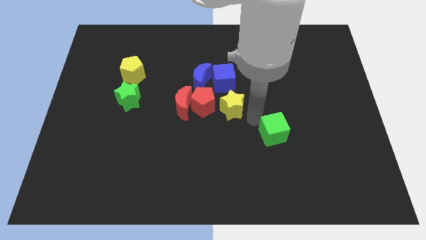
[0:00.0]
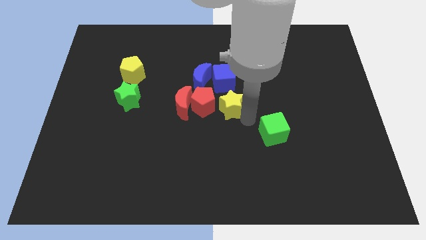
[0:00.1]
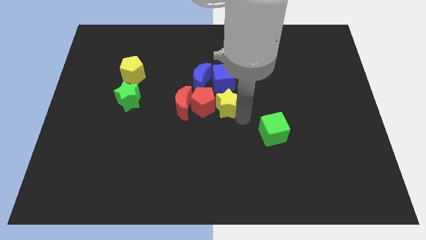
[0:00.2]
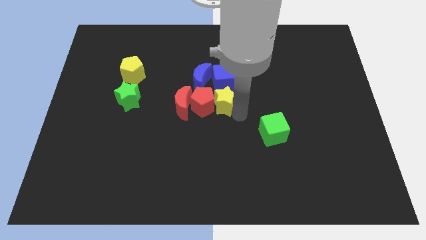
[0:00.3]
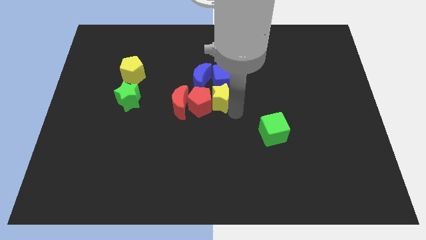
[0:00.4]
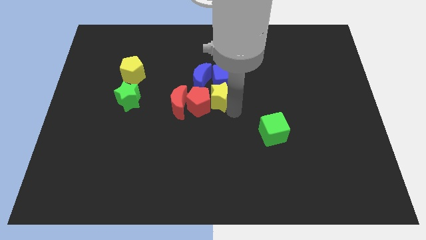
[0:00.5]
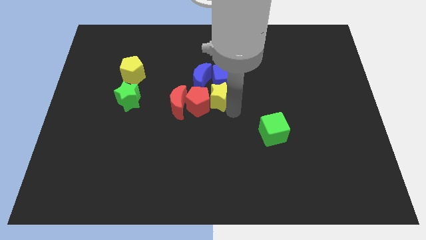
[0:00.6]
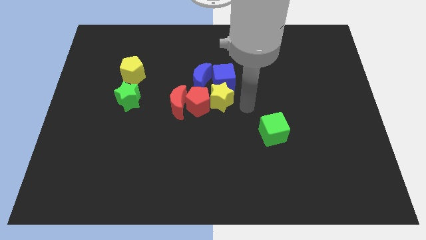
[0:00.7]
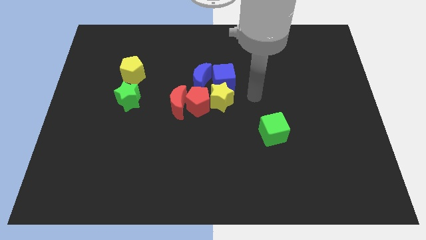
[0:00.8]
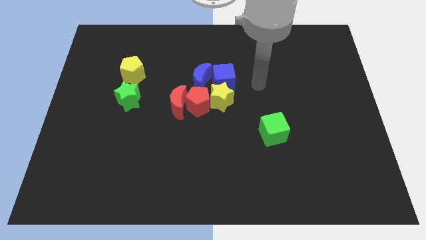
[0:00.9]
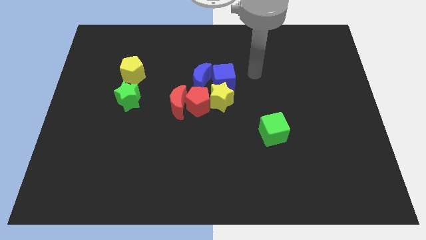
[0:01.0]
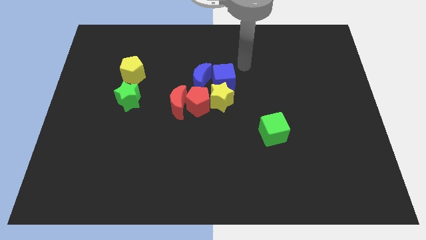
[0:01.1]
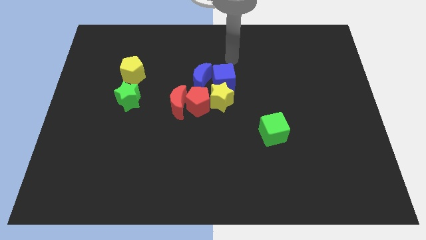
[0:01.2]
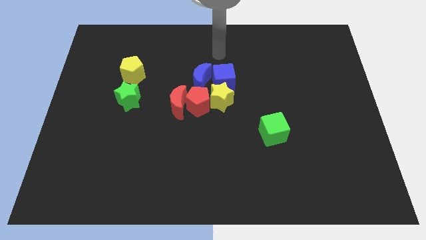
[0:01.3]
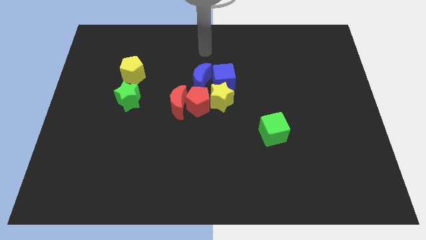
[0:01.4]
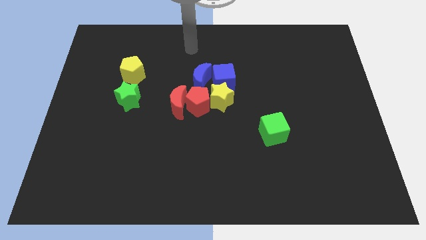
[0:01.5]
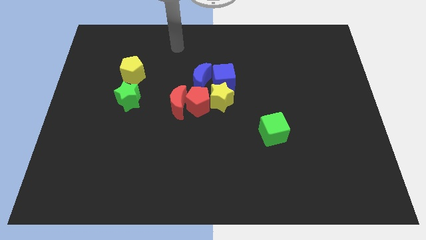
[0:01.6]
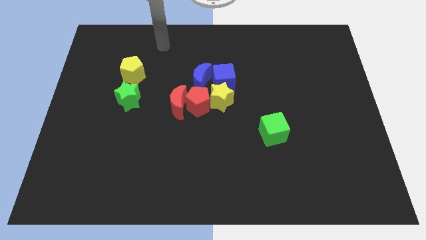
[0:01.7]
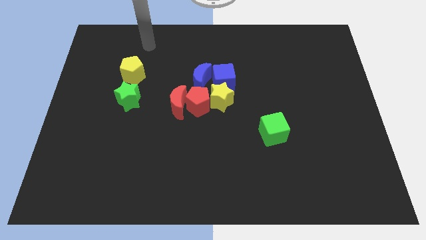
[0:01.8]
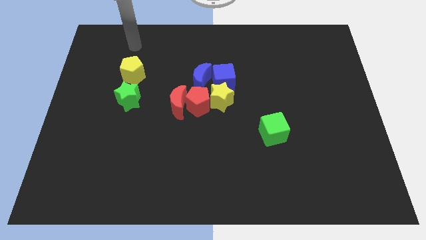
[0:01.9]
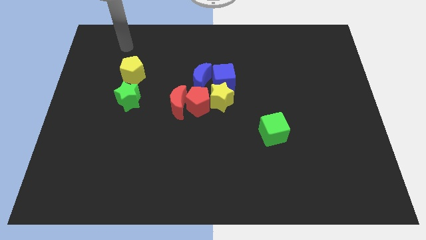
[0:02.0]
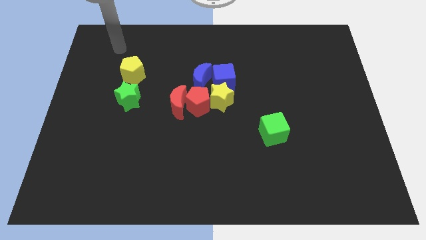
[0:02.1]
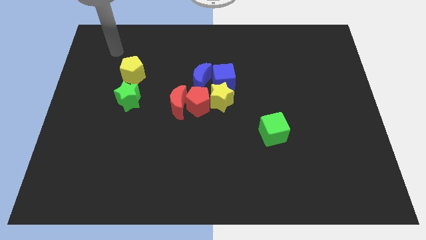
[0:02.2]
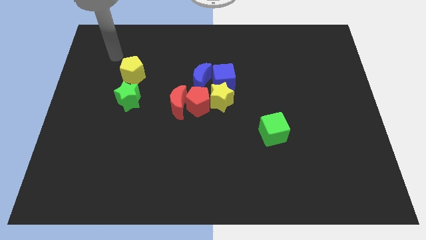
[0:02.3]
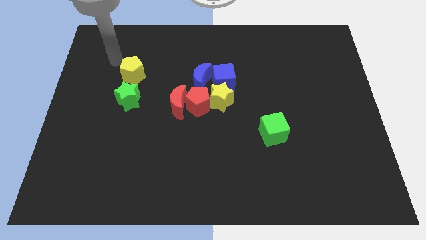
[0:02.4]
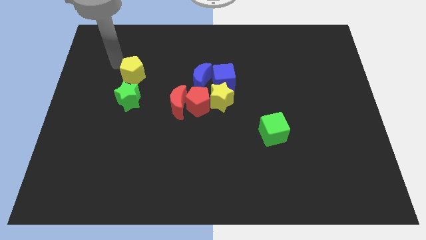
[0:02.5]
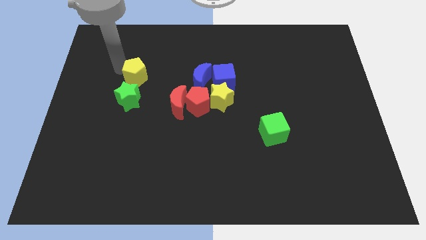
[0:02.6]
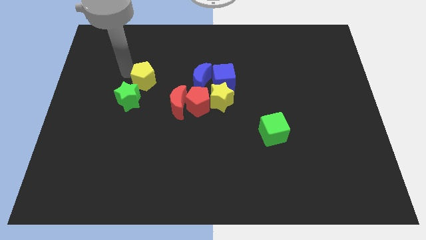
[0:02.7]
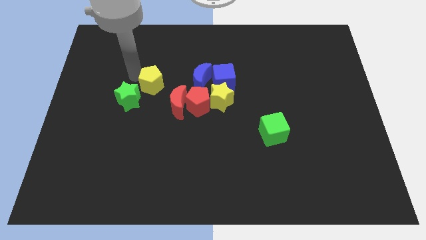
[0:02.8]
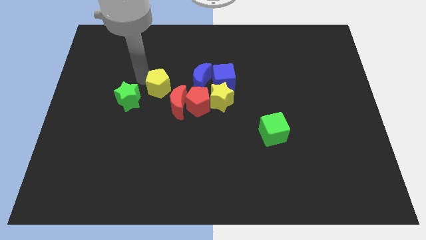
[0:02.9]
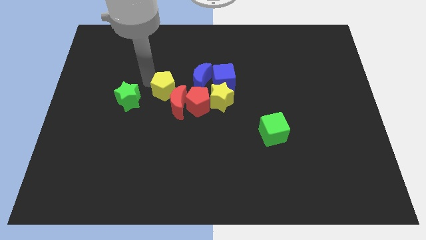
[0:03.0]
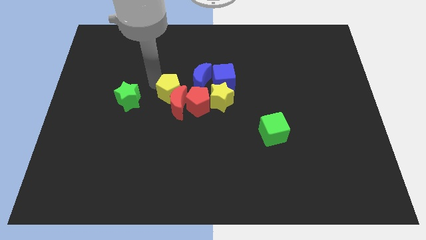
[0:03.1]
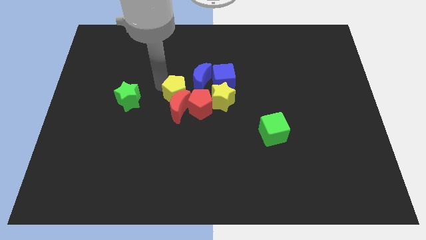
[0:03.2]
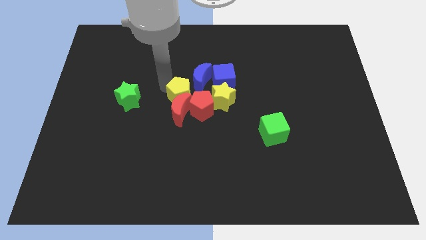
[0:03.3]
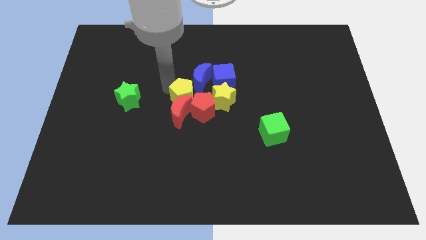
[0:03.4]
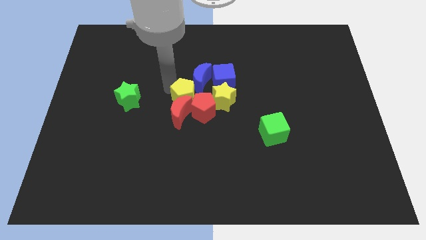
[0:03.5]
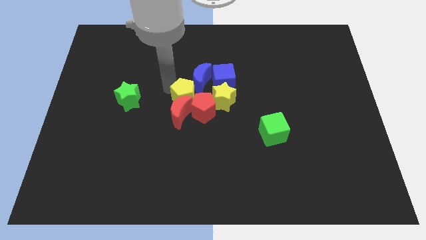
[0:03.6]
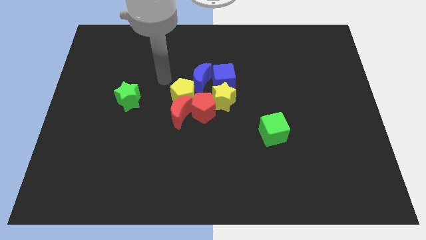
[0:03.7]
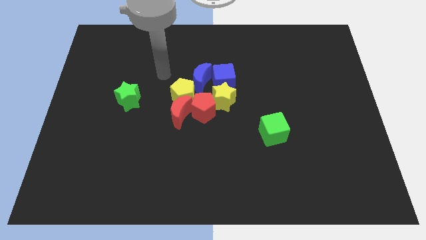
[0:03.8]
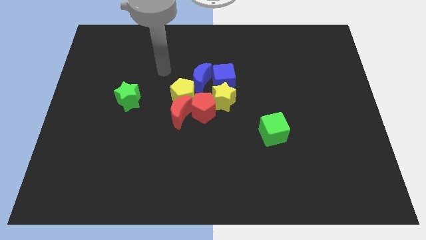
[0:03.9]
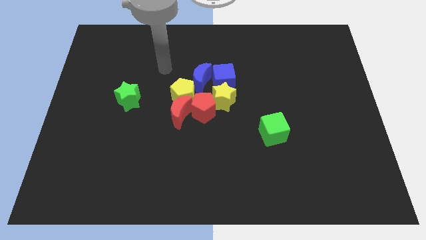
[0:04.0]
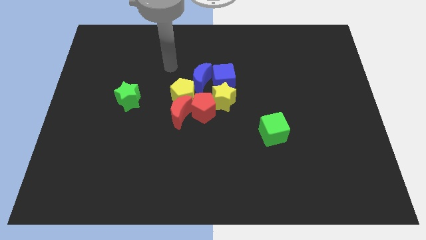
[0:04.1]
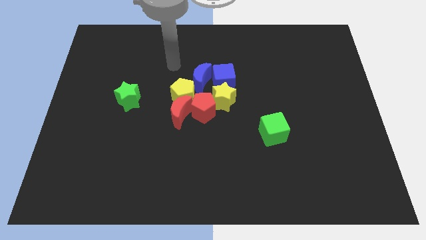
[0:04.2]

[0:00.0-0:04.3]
push the yellow star and yellow pentagon in to the red and blue blocks

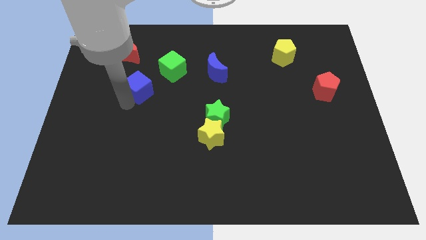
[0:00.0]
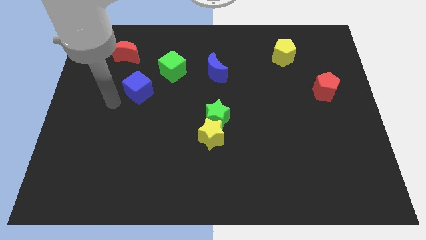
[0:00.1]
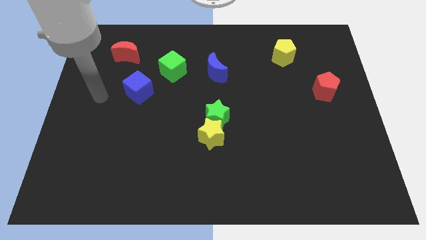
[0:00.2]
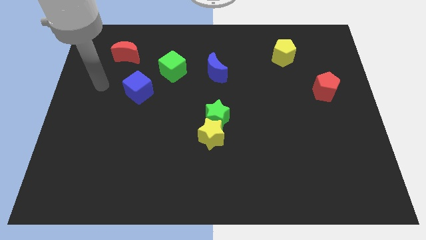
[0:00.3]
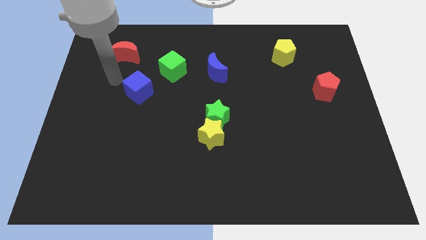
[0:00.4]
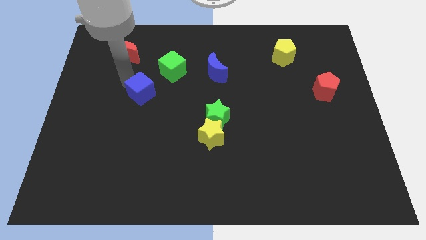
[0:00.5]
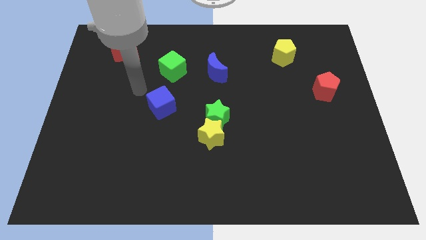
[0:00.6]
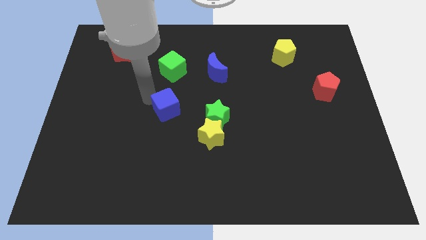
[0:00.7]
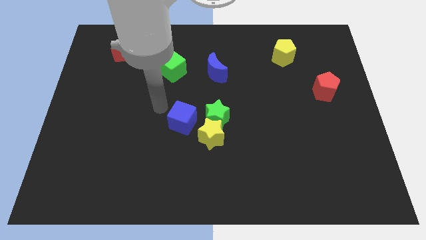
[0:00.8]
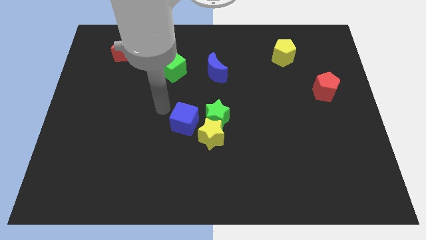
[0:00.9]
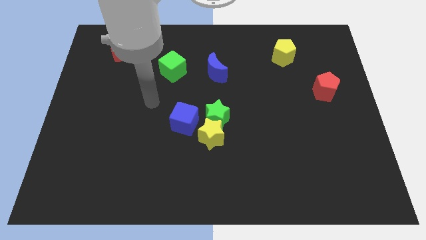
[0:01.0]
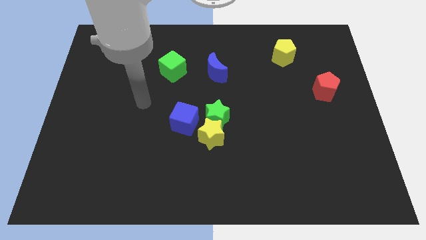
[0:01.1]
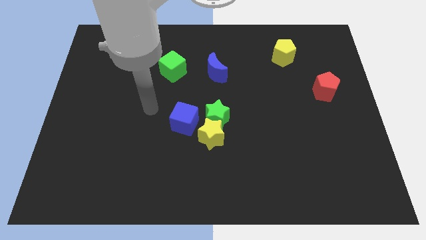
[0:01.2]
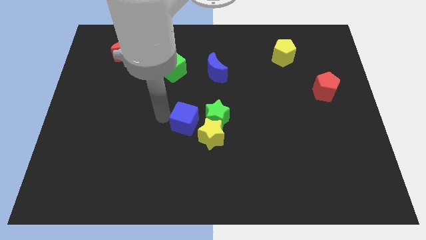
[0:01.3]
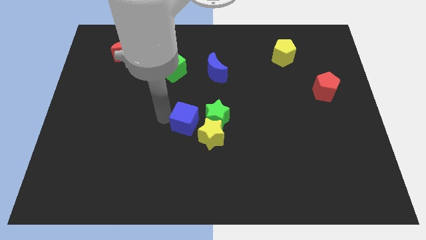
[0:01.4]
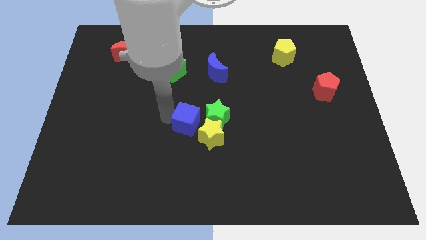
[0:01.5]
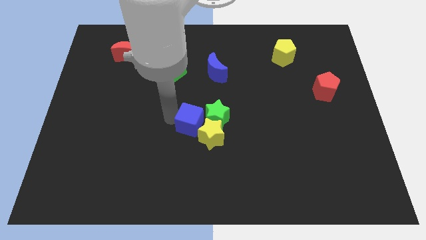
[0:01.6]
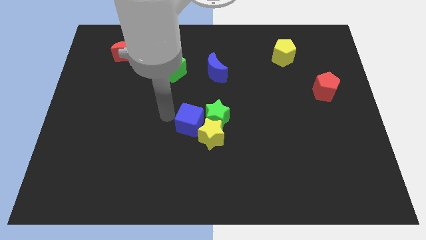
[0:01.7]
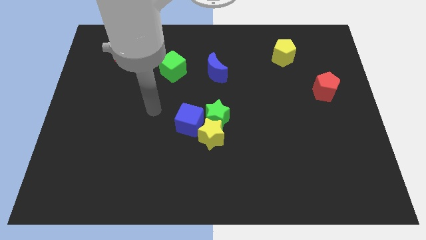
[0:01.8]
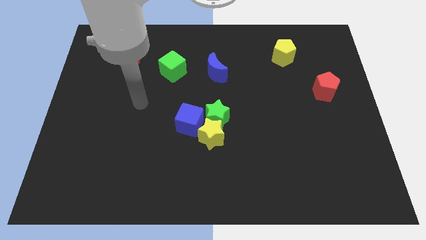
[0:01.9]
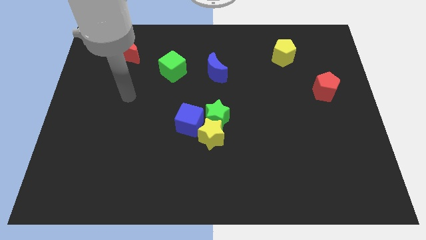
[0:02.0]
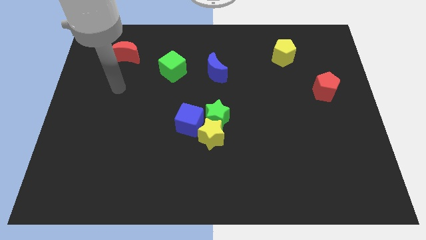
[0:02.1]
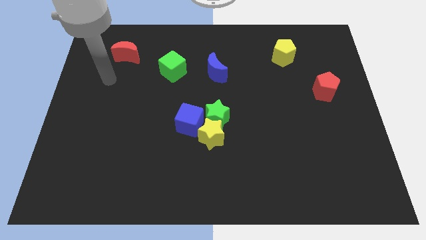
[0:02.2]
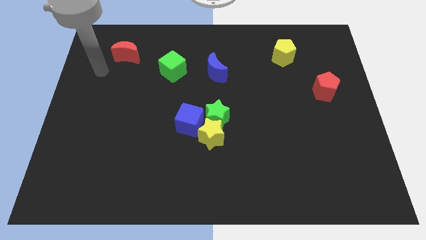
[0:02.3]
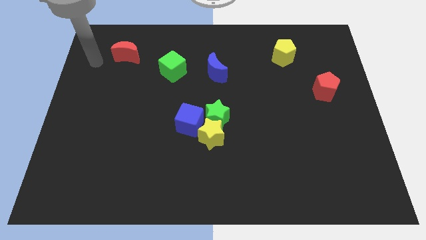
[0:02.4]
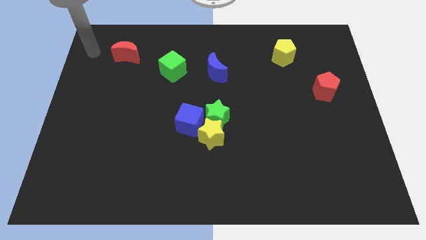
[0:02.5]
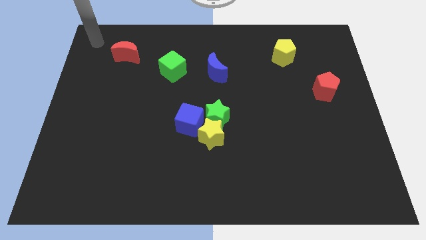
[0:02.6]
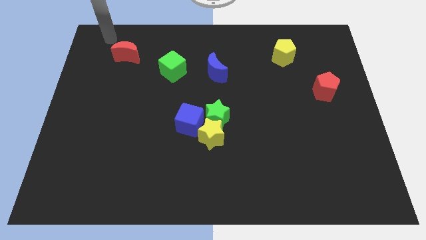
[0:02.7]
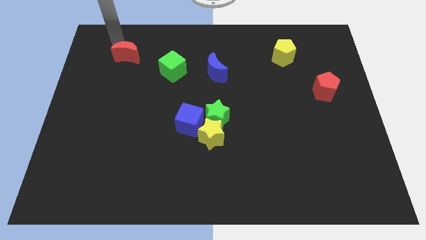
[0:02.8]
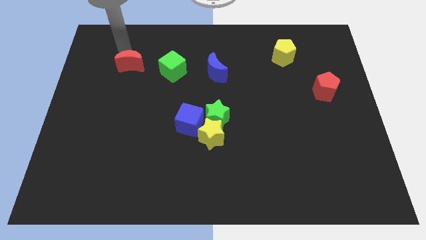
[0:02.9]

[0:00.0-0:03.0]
move the arm above to the red crescent

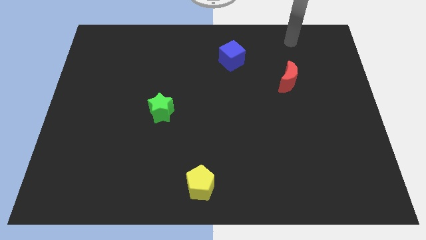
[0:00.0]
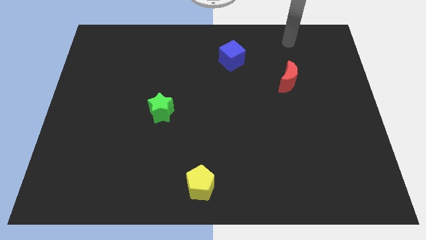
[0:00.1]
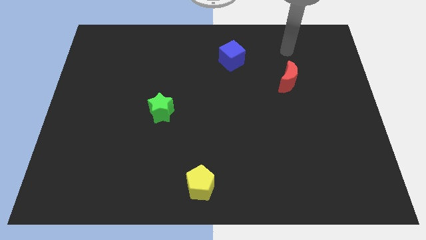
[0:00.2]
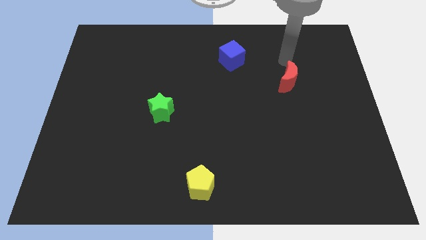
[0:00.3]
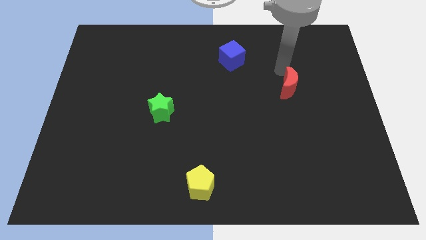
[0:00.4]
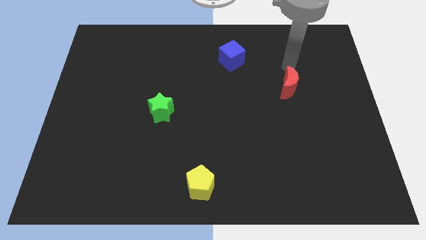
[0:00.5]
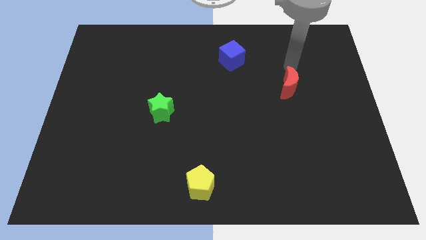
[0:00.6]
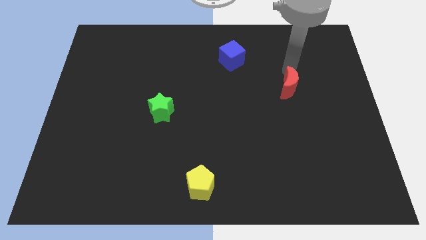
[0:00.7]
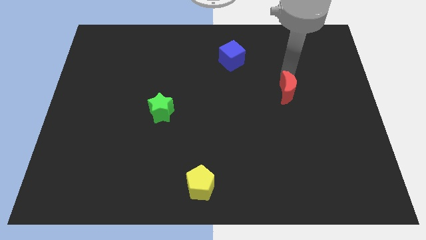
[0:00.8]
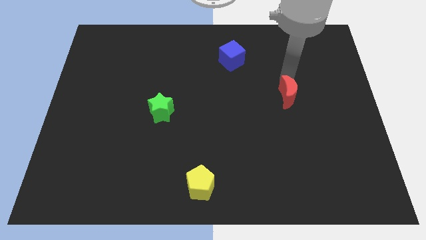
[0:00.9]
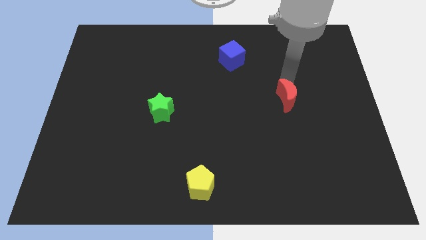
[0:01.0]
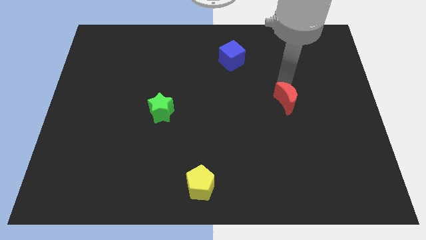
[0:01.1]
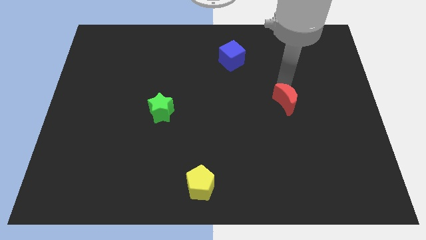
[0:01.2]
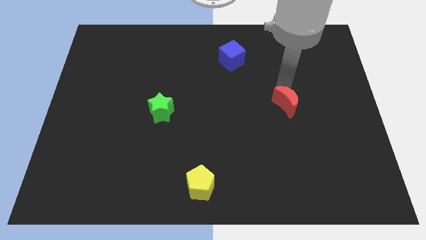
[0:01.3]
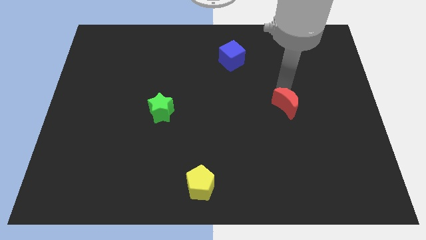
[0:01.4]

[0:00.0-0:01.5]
place the crescent to the right of the star

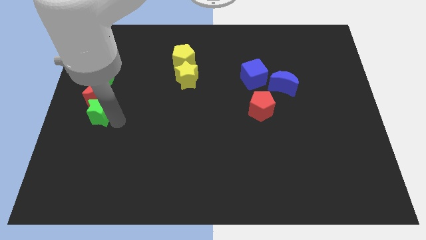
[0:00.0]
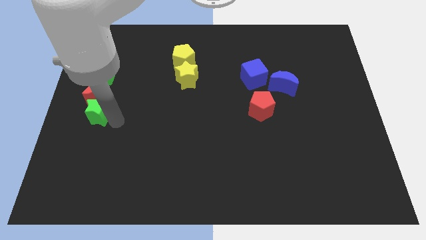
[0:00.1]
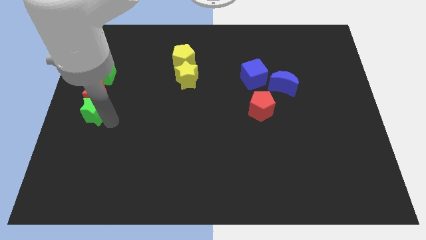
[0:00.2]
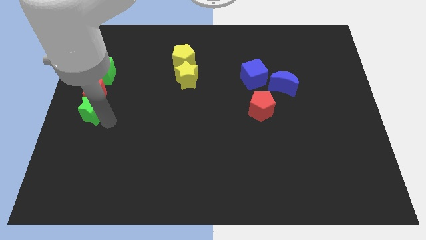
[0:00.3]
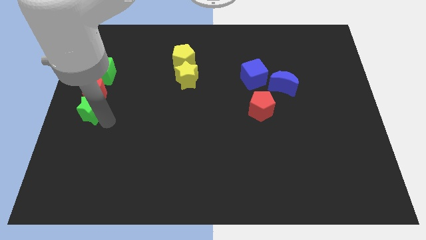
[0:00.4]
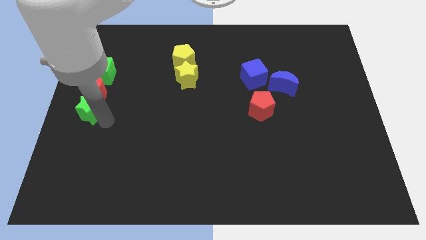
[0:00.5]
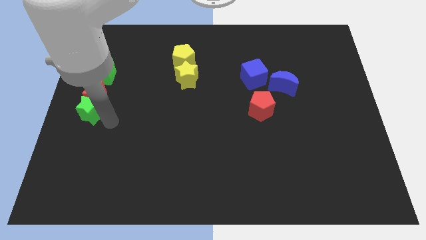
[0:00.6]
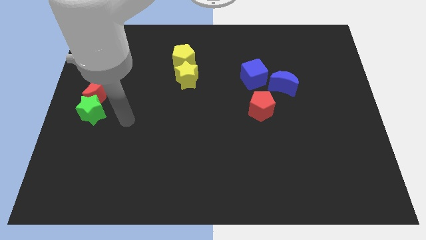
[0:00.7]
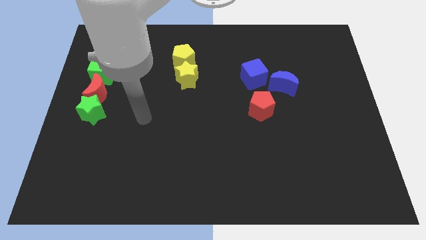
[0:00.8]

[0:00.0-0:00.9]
put green star at the bottom of red moon
